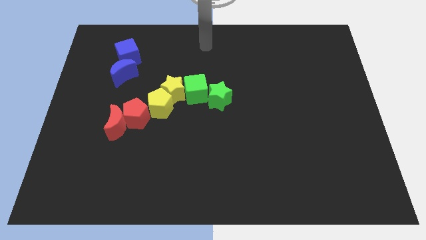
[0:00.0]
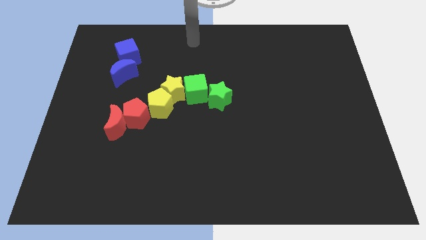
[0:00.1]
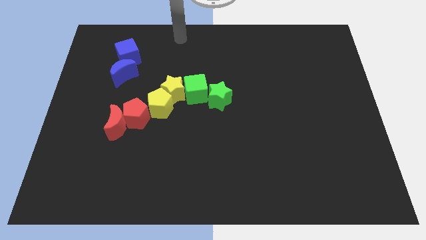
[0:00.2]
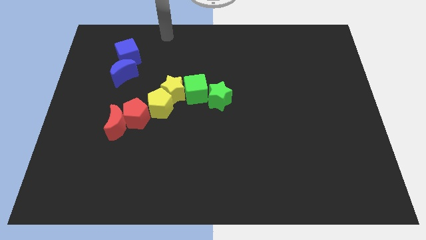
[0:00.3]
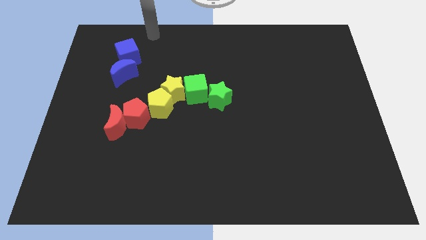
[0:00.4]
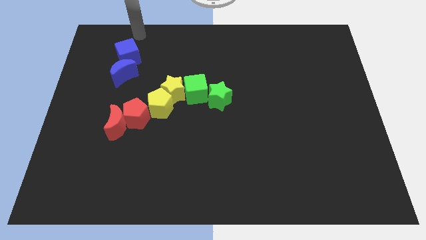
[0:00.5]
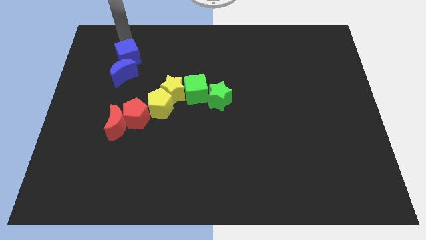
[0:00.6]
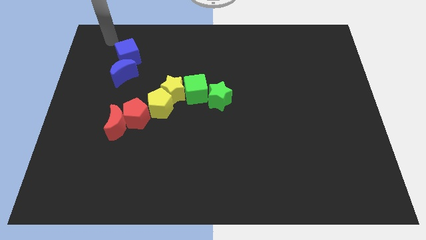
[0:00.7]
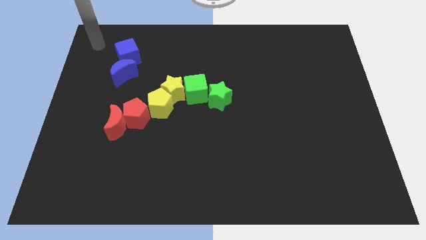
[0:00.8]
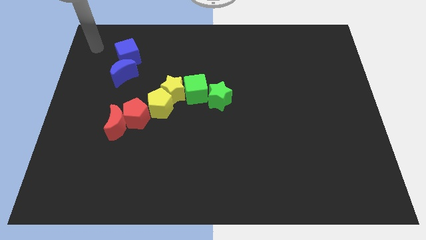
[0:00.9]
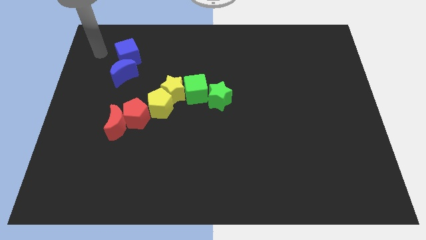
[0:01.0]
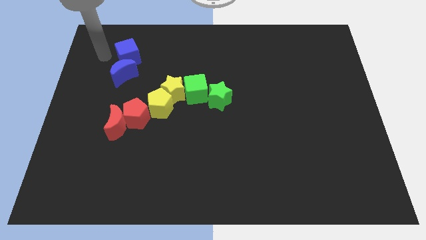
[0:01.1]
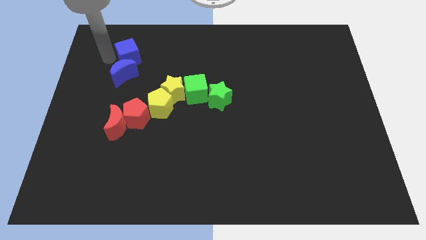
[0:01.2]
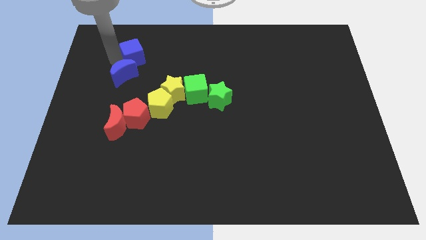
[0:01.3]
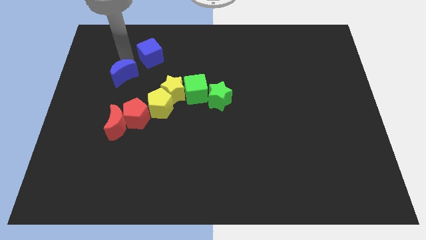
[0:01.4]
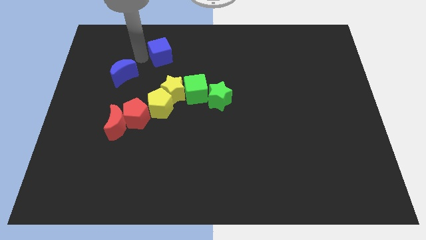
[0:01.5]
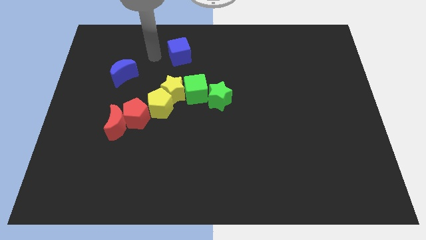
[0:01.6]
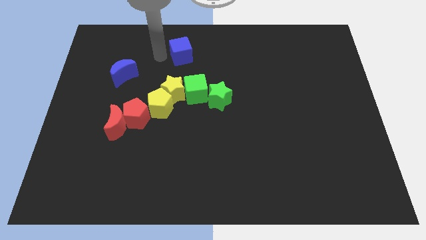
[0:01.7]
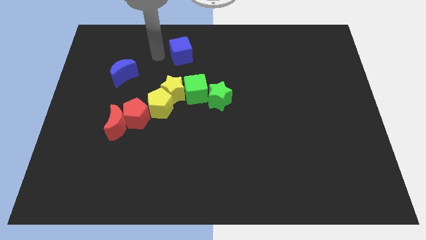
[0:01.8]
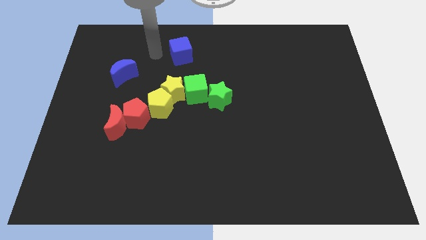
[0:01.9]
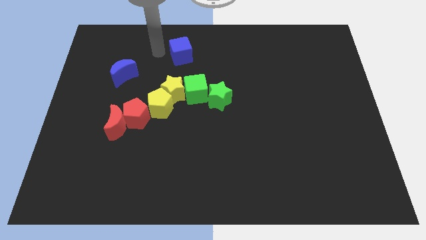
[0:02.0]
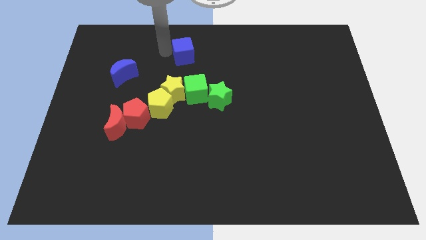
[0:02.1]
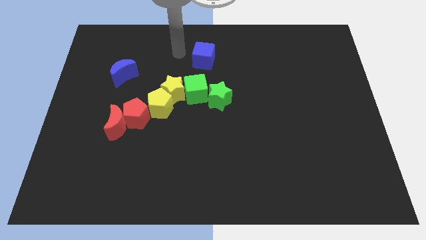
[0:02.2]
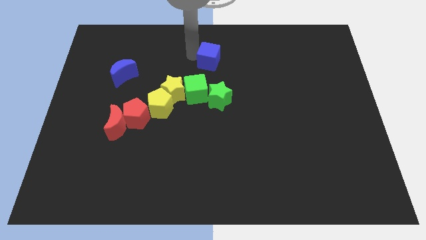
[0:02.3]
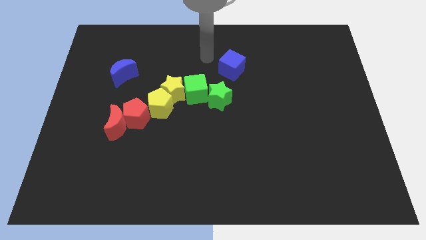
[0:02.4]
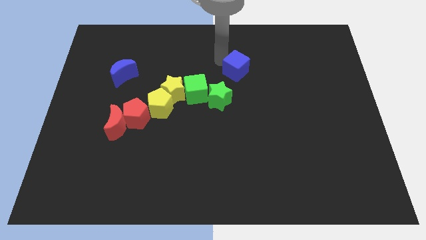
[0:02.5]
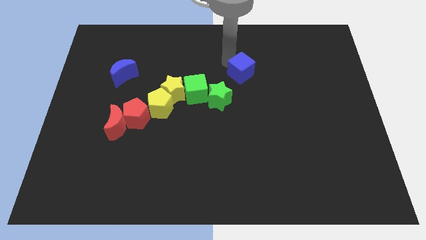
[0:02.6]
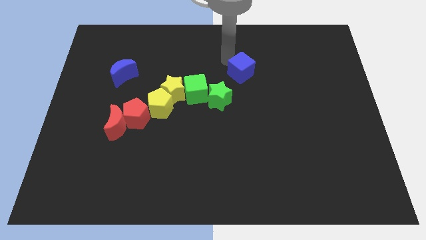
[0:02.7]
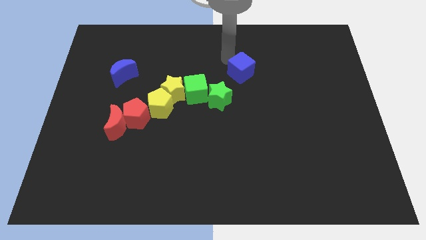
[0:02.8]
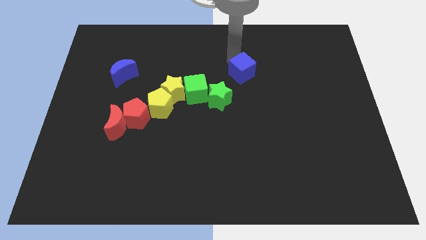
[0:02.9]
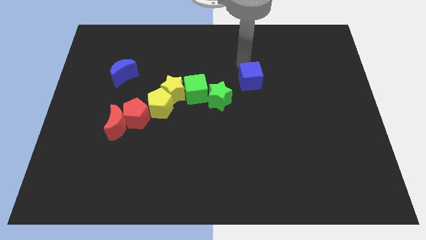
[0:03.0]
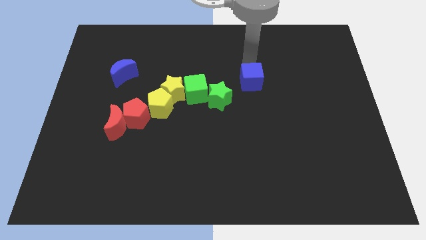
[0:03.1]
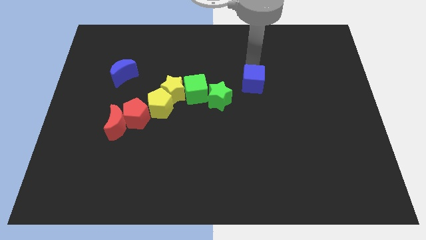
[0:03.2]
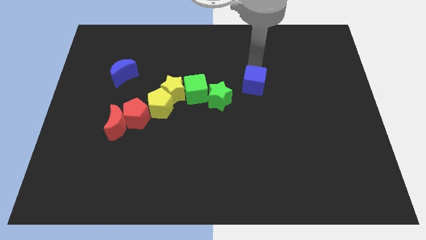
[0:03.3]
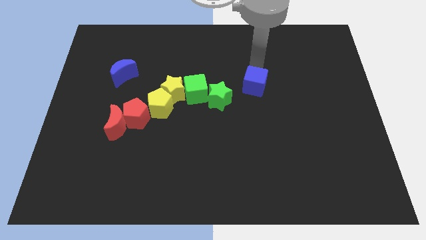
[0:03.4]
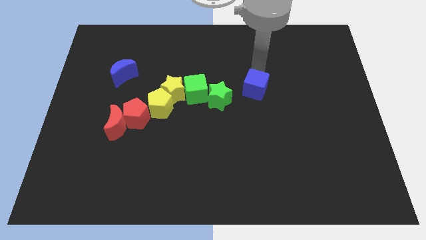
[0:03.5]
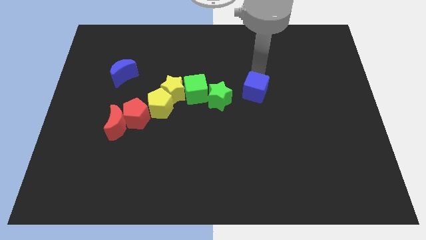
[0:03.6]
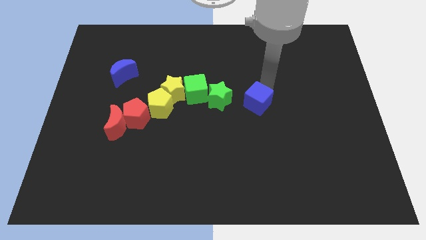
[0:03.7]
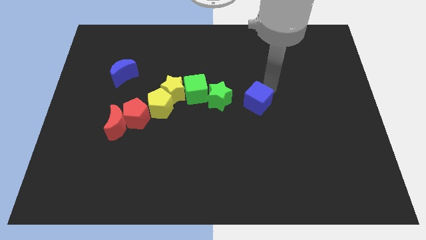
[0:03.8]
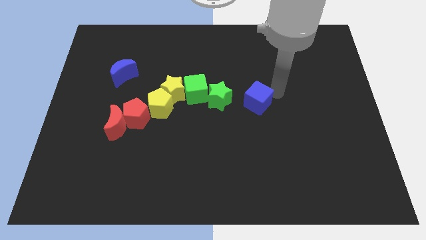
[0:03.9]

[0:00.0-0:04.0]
move the blue cube to the right side of the green star

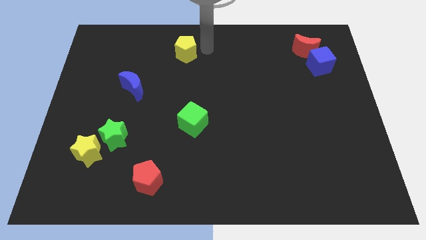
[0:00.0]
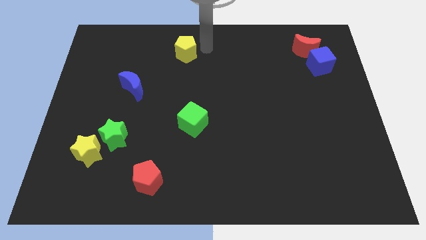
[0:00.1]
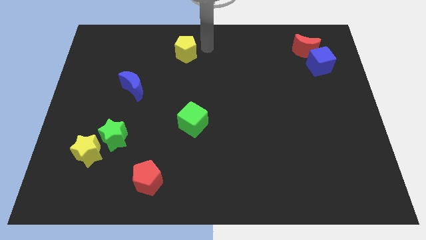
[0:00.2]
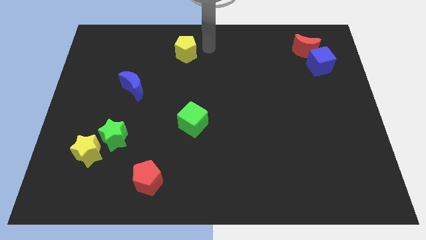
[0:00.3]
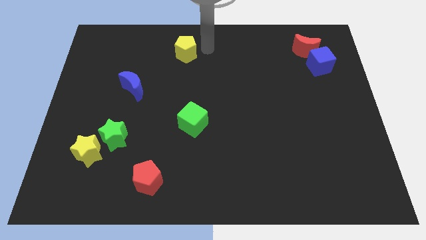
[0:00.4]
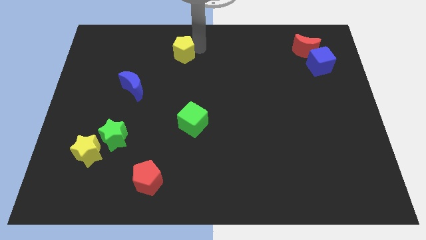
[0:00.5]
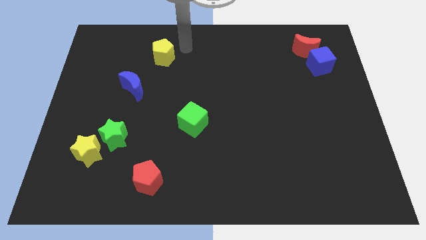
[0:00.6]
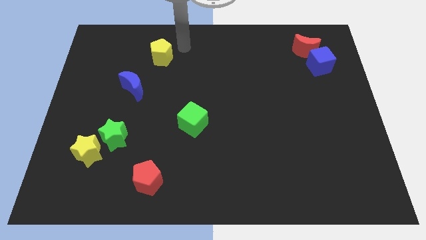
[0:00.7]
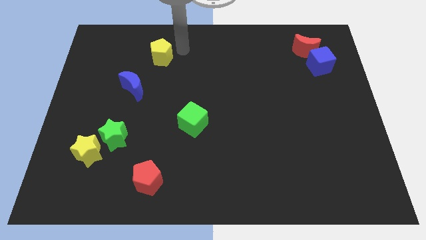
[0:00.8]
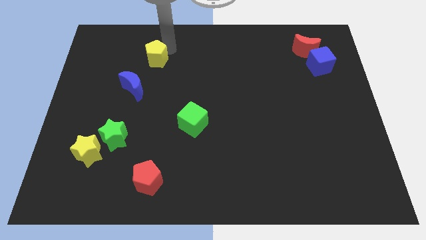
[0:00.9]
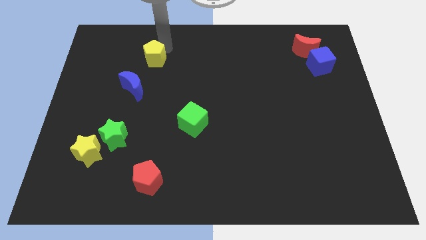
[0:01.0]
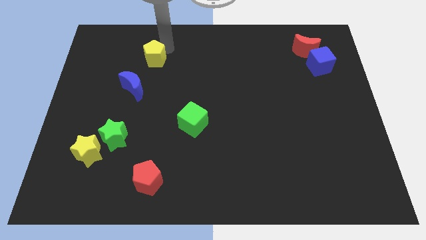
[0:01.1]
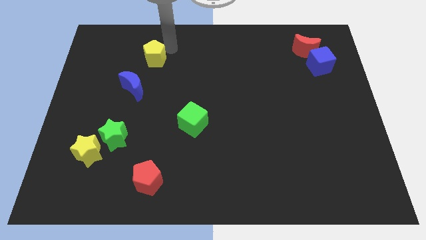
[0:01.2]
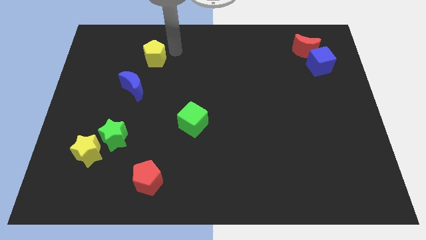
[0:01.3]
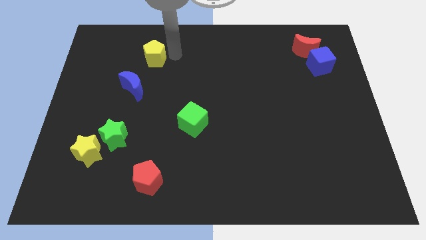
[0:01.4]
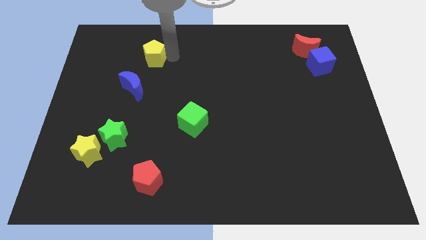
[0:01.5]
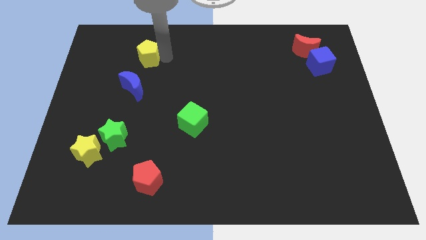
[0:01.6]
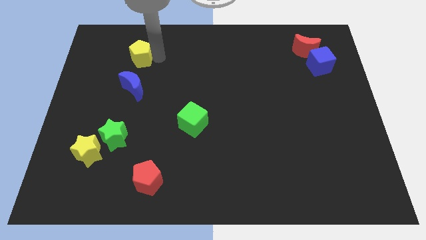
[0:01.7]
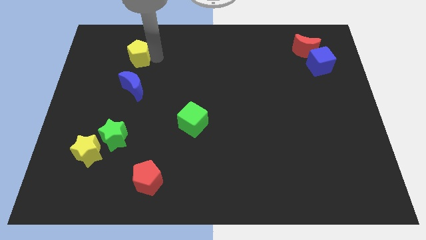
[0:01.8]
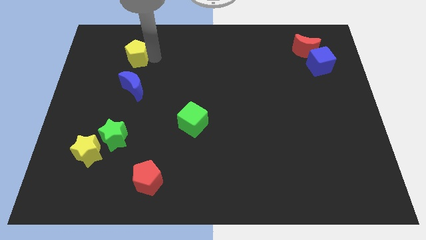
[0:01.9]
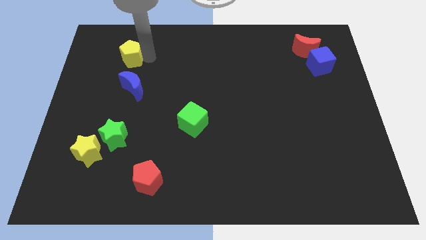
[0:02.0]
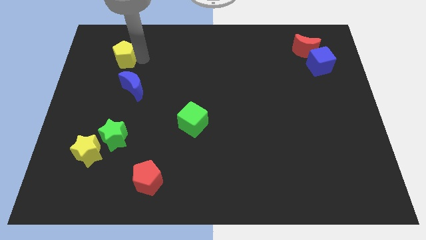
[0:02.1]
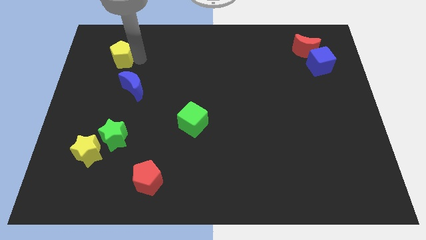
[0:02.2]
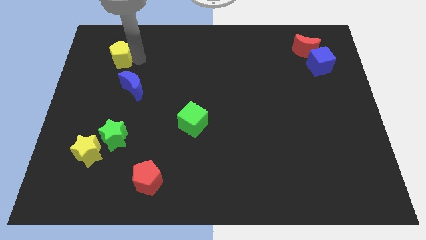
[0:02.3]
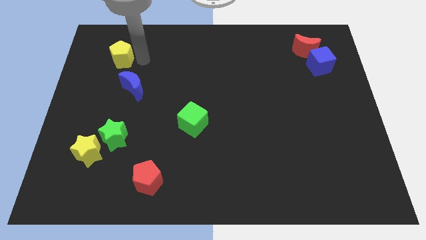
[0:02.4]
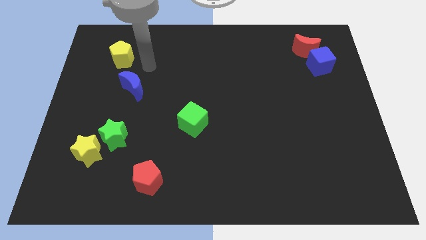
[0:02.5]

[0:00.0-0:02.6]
move yellow pentagon diagonally above blue moon

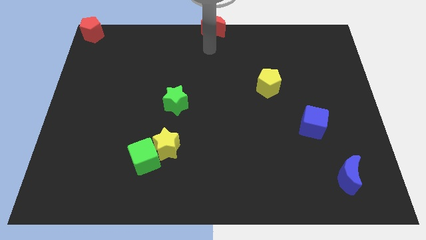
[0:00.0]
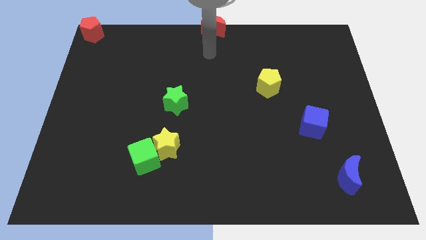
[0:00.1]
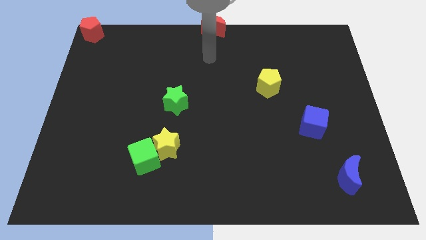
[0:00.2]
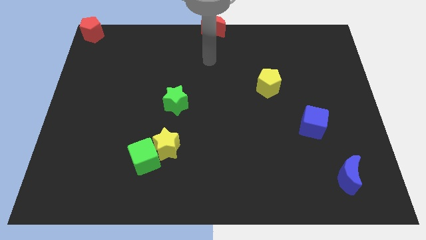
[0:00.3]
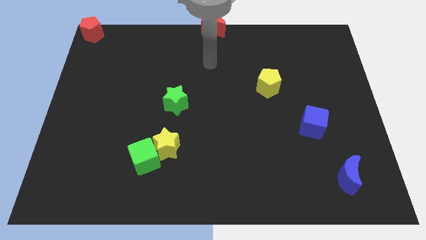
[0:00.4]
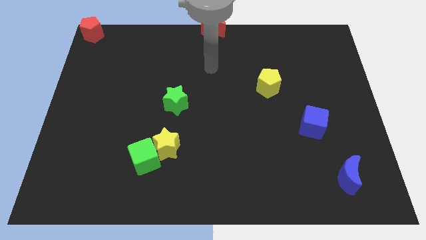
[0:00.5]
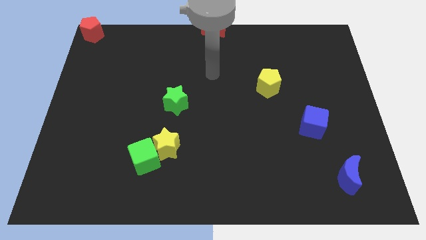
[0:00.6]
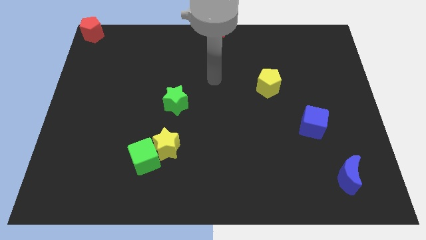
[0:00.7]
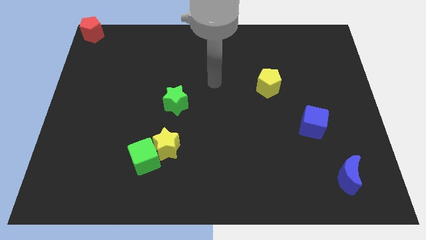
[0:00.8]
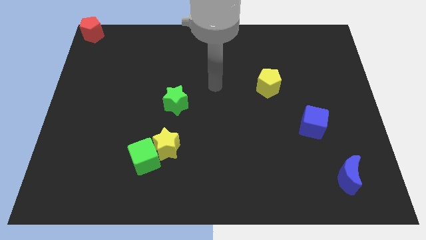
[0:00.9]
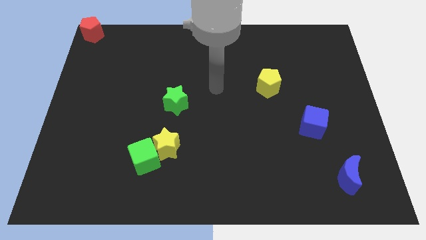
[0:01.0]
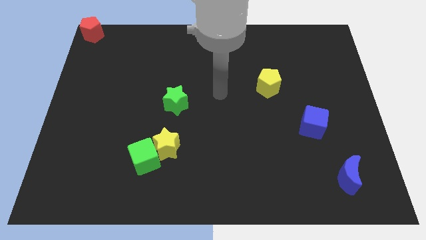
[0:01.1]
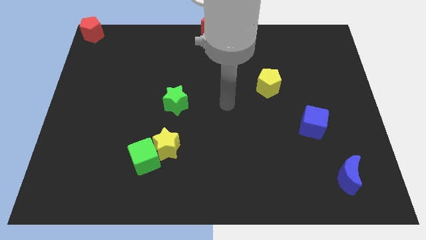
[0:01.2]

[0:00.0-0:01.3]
move your arm to the center of the board

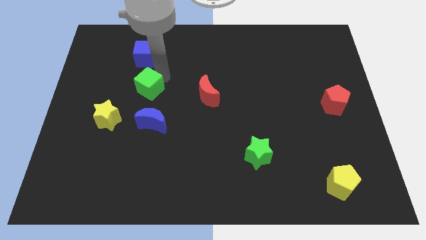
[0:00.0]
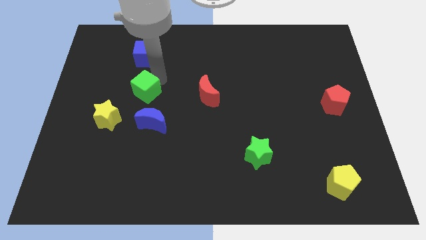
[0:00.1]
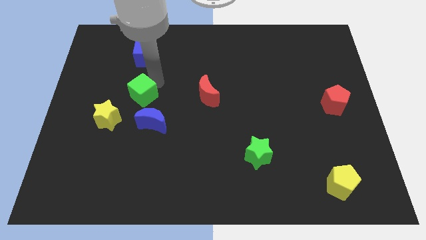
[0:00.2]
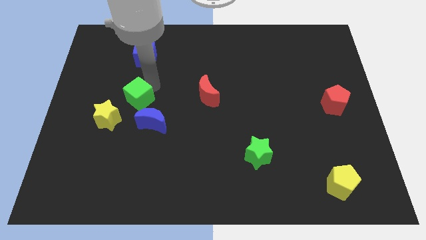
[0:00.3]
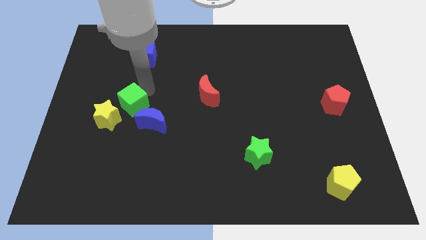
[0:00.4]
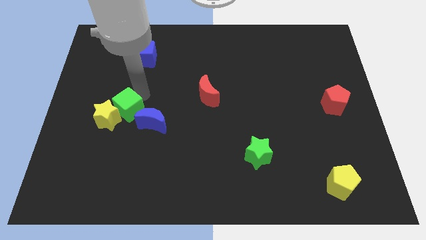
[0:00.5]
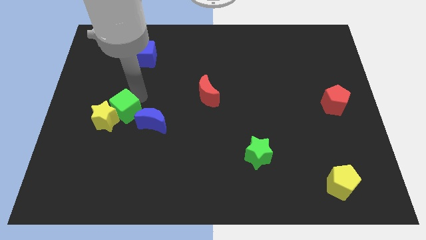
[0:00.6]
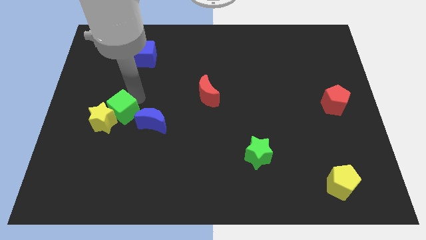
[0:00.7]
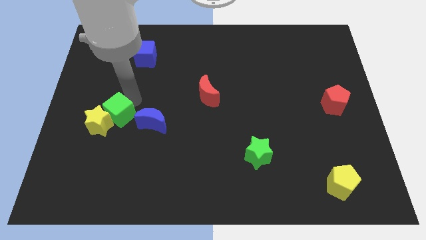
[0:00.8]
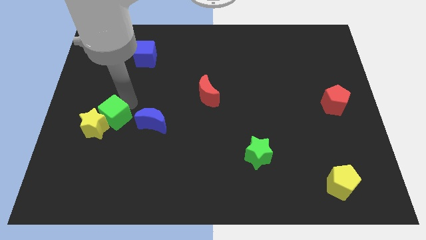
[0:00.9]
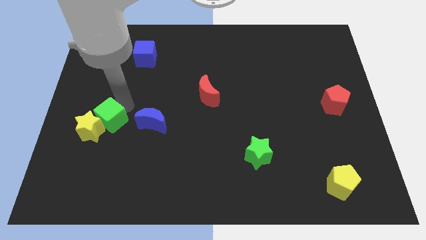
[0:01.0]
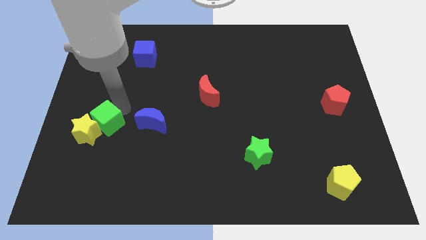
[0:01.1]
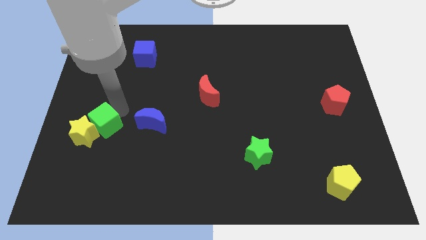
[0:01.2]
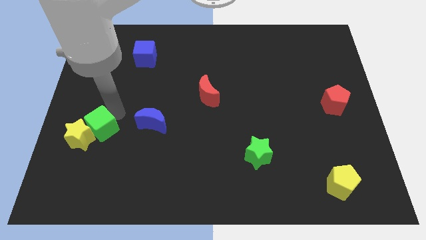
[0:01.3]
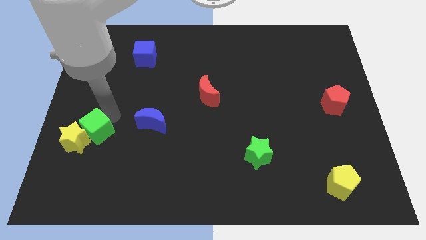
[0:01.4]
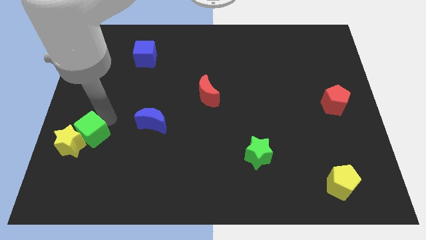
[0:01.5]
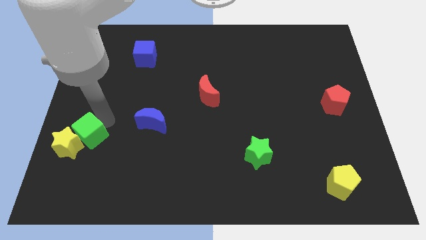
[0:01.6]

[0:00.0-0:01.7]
move green cube into yellow star
